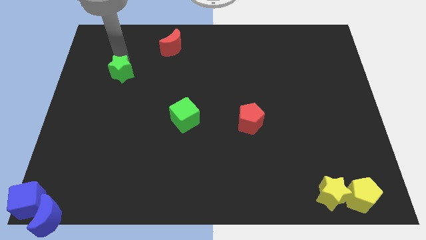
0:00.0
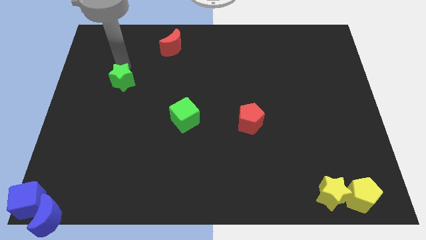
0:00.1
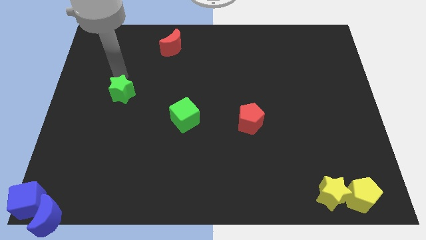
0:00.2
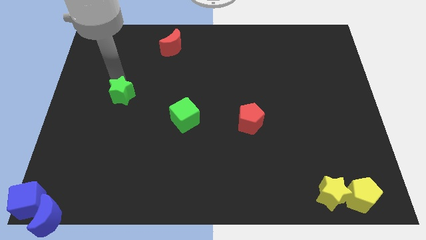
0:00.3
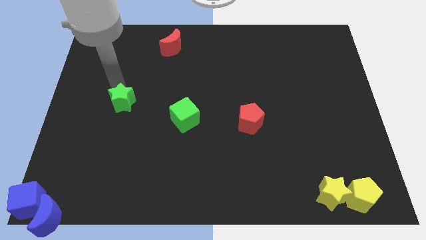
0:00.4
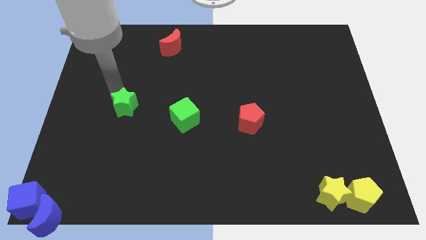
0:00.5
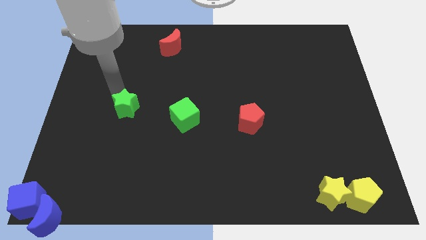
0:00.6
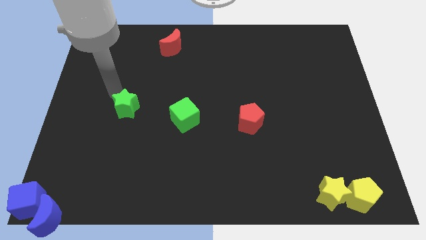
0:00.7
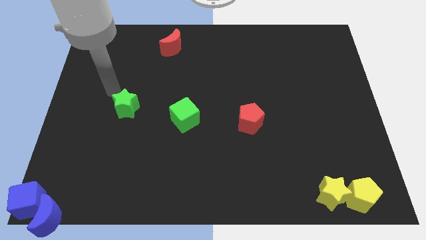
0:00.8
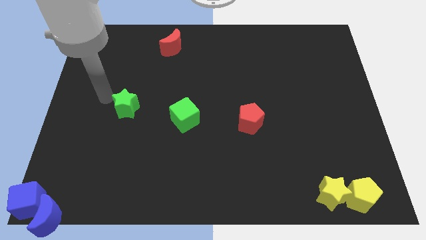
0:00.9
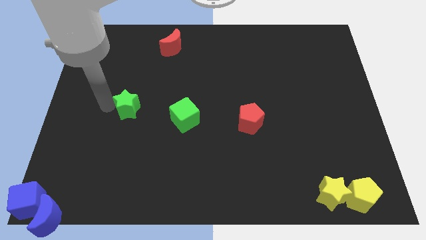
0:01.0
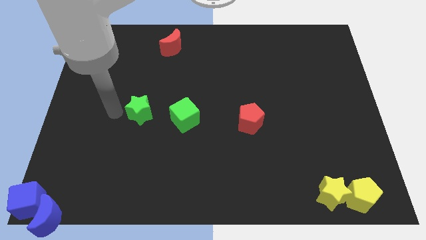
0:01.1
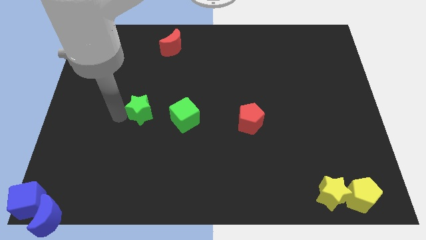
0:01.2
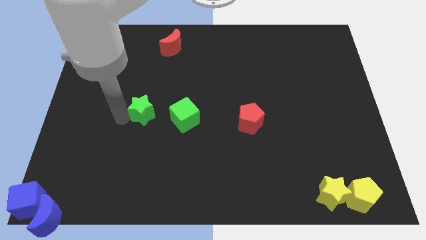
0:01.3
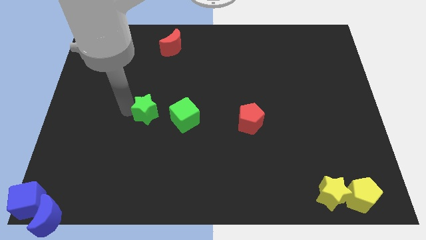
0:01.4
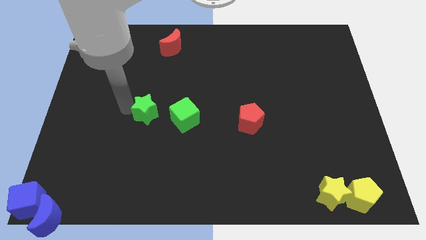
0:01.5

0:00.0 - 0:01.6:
drag the green star slightly downwards

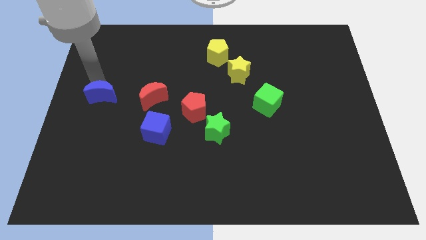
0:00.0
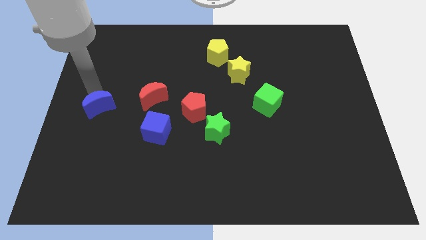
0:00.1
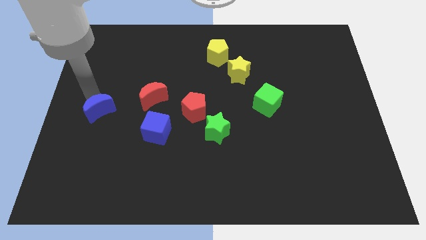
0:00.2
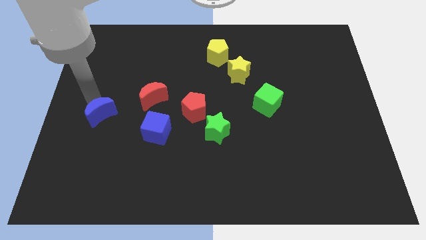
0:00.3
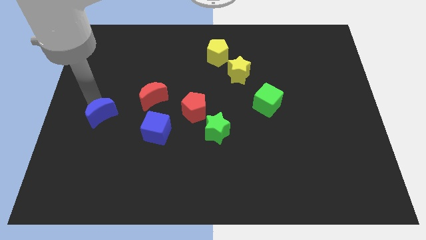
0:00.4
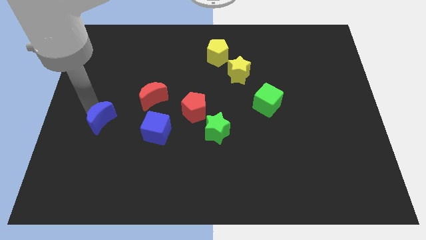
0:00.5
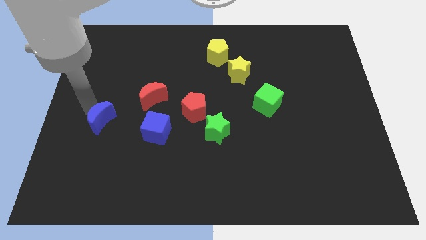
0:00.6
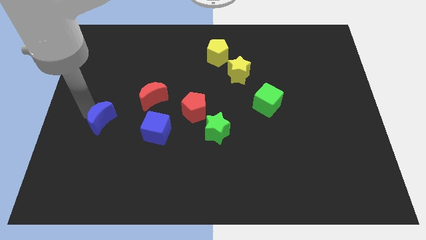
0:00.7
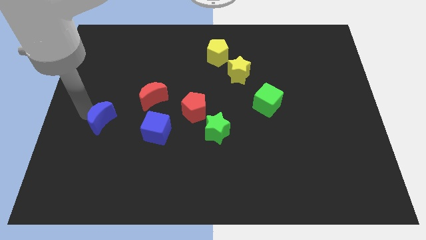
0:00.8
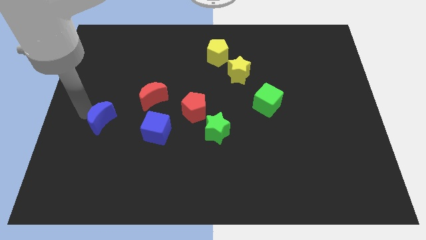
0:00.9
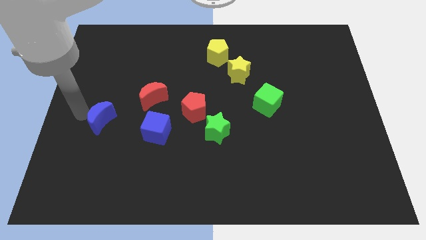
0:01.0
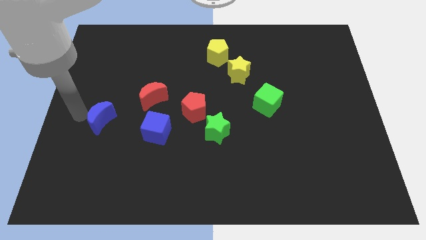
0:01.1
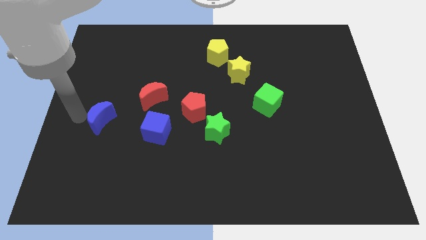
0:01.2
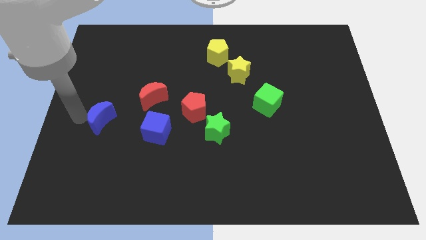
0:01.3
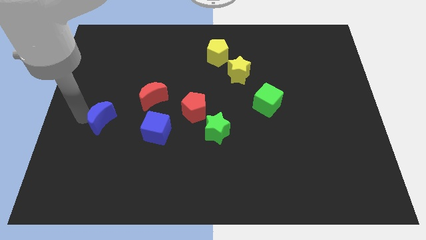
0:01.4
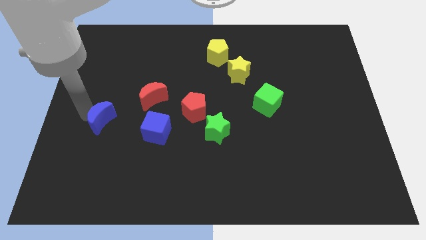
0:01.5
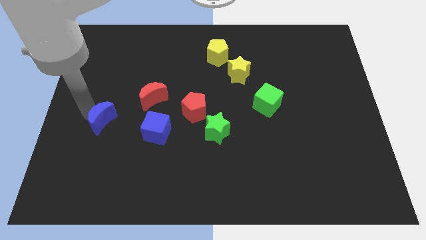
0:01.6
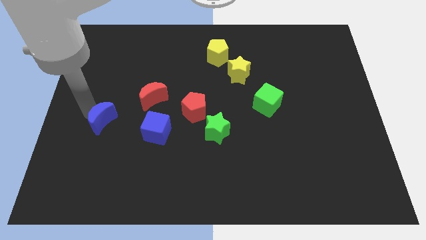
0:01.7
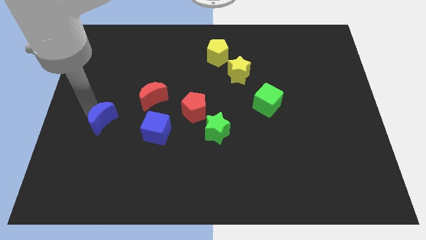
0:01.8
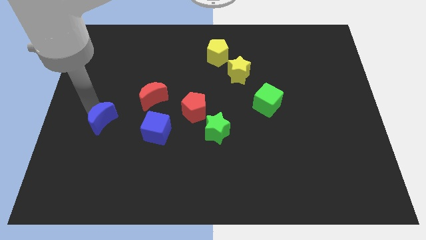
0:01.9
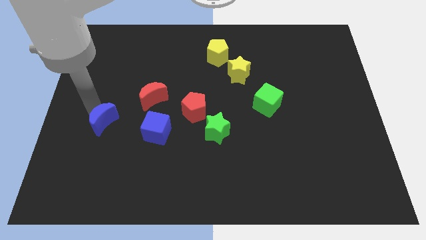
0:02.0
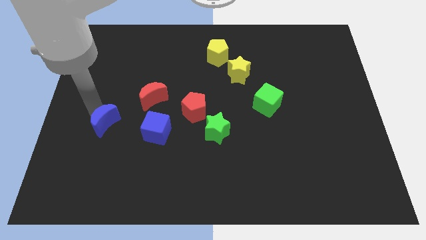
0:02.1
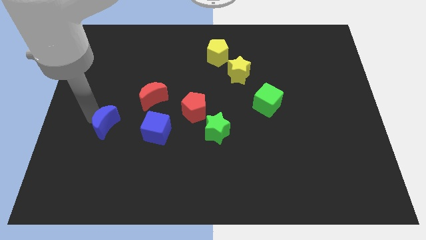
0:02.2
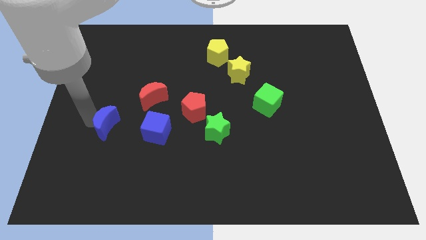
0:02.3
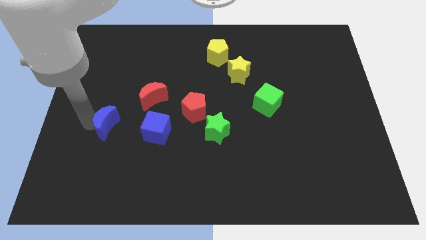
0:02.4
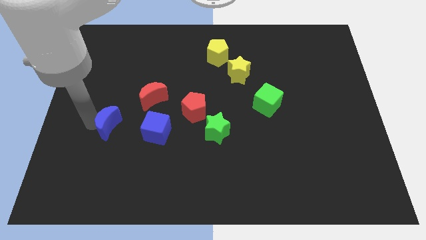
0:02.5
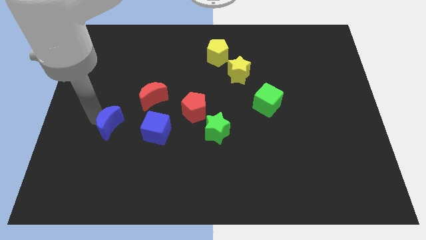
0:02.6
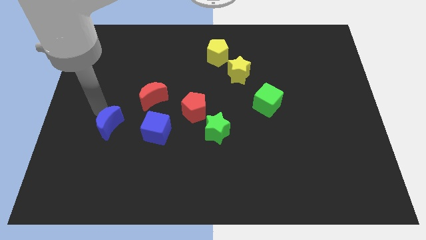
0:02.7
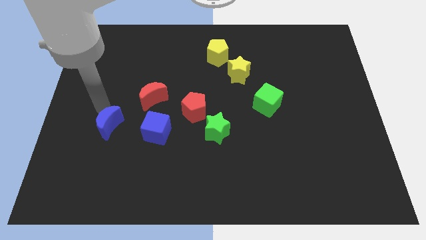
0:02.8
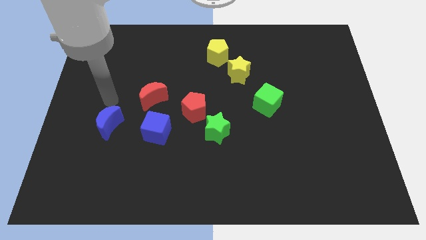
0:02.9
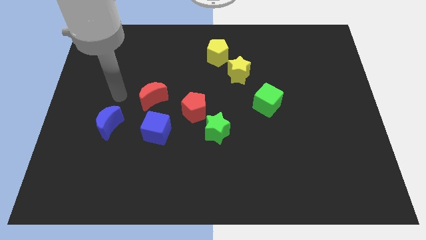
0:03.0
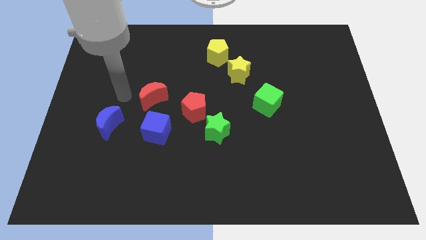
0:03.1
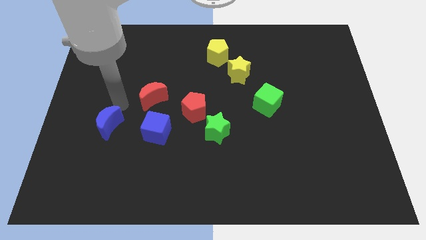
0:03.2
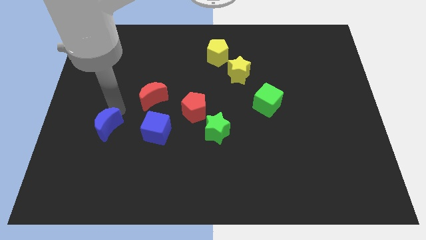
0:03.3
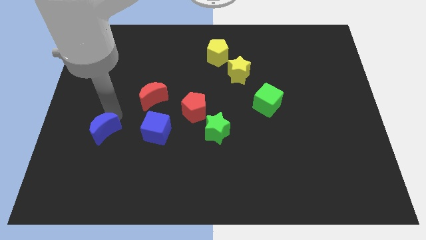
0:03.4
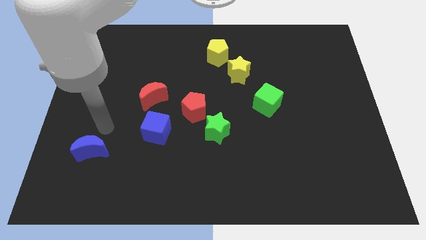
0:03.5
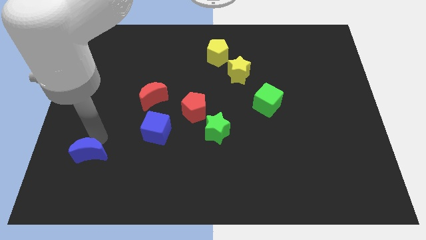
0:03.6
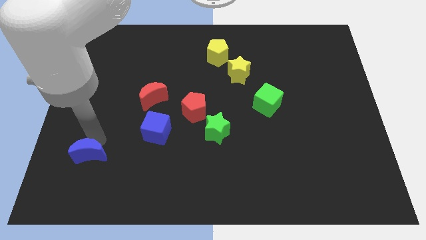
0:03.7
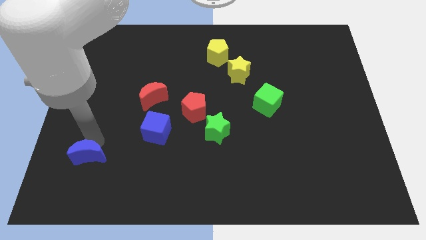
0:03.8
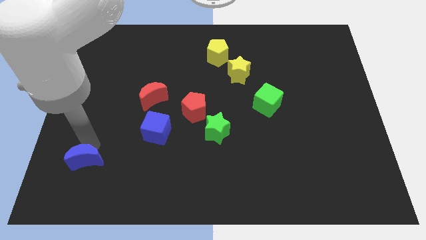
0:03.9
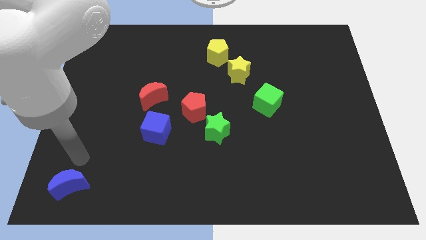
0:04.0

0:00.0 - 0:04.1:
push blue moon towards bottom left

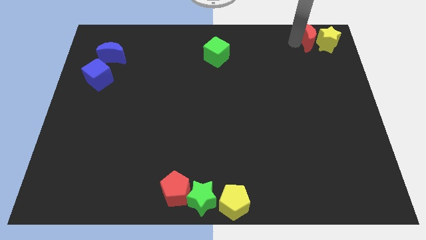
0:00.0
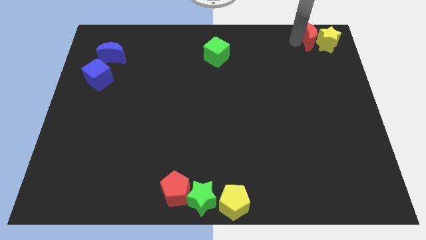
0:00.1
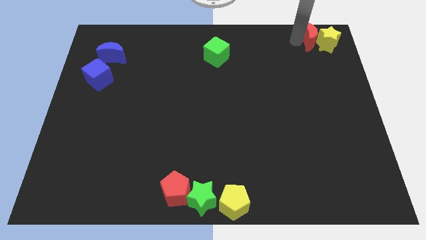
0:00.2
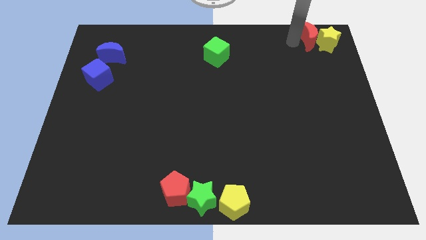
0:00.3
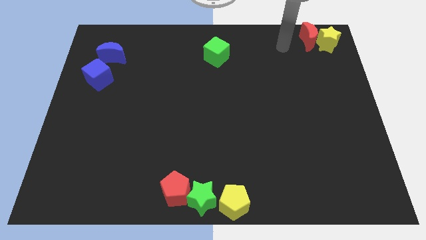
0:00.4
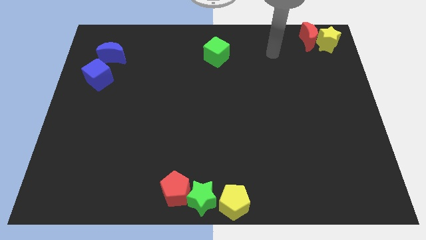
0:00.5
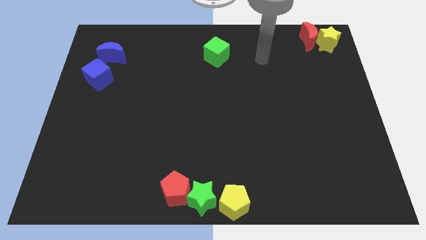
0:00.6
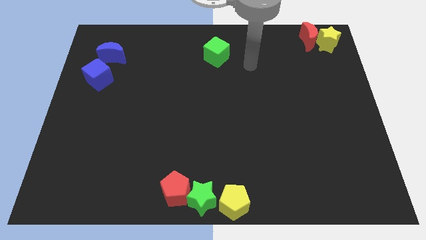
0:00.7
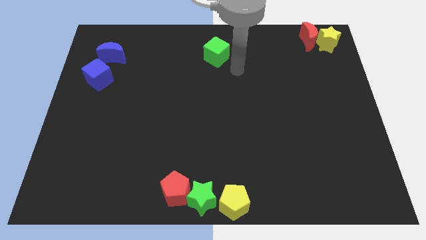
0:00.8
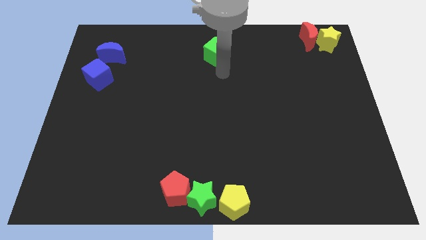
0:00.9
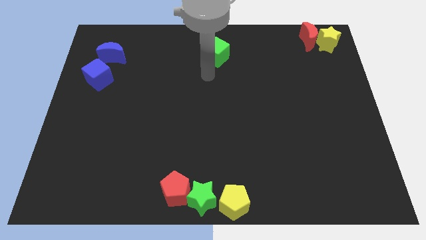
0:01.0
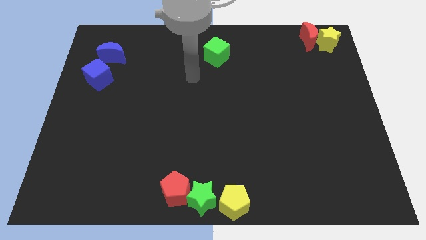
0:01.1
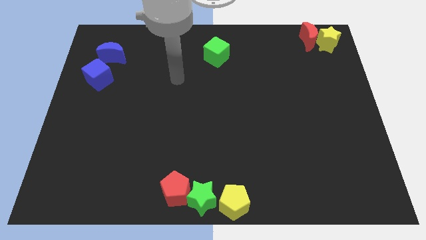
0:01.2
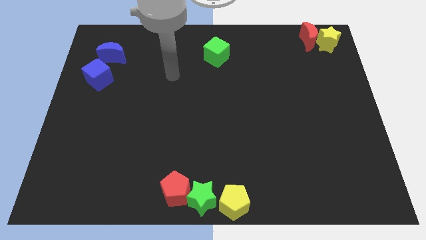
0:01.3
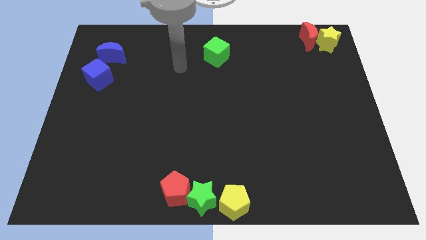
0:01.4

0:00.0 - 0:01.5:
move your arm away from red moon

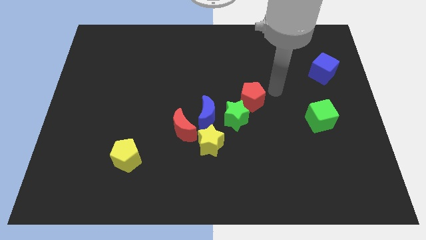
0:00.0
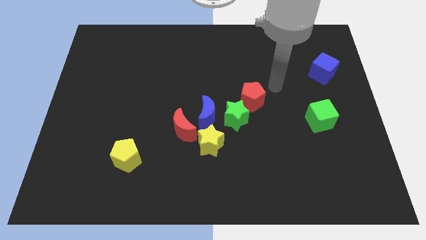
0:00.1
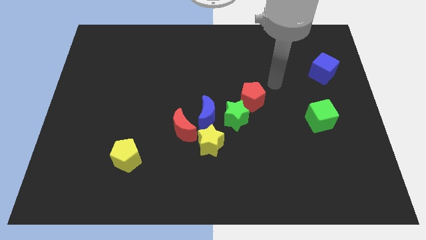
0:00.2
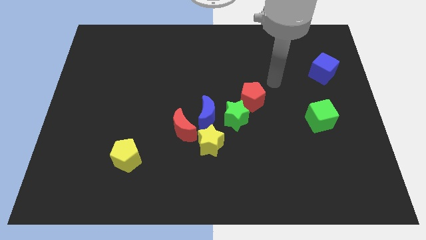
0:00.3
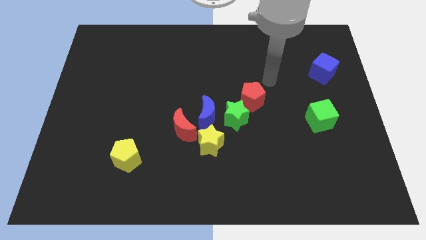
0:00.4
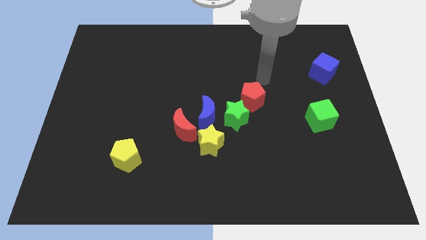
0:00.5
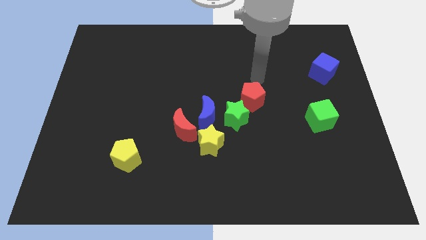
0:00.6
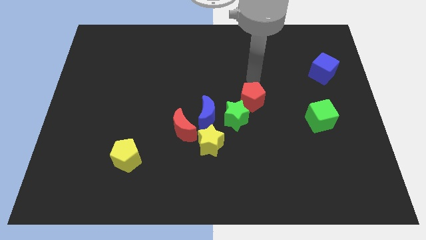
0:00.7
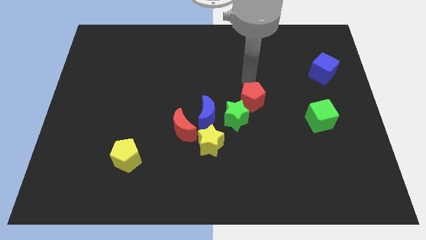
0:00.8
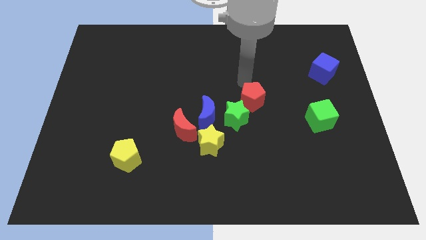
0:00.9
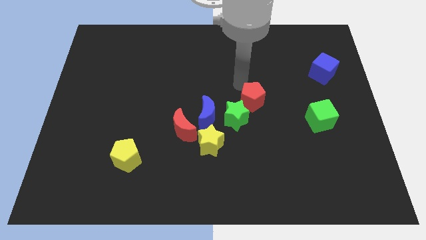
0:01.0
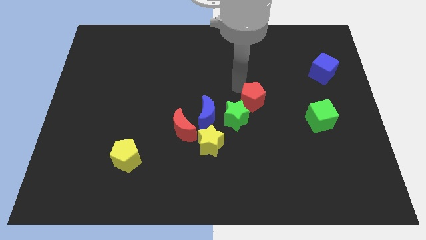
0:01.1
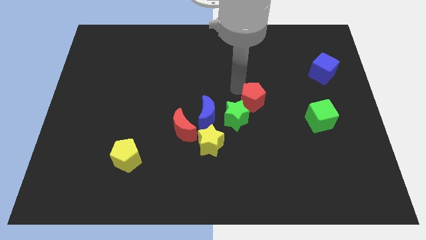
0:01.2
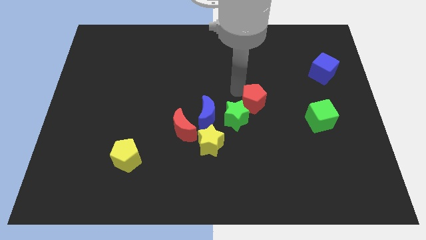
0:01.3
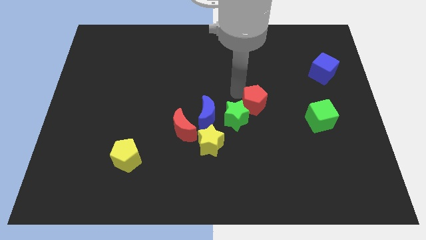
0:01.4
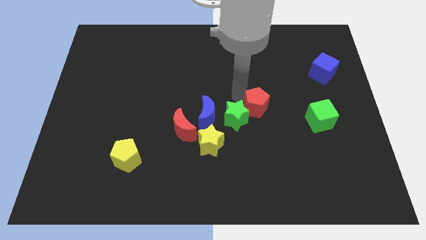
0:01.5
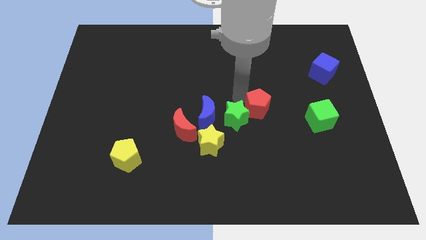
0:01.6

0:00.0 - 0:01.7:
push the red pentagon slightly to the bottom of the board

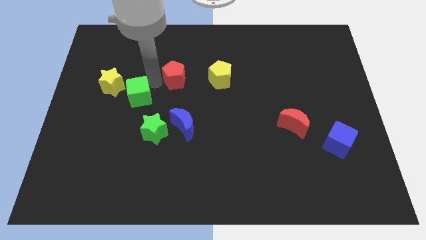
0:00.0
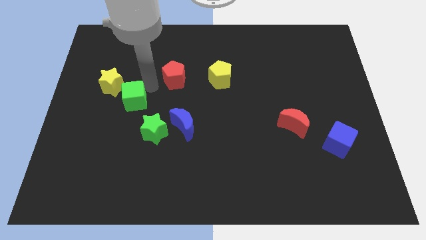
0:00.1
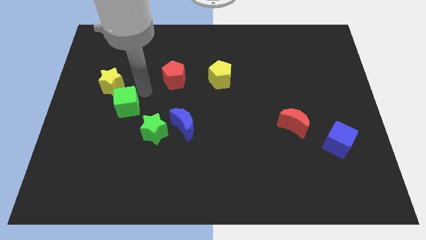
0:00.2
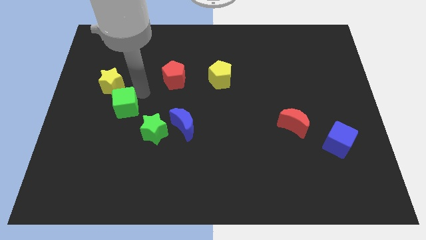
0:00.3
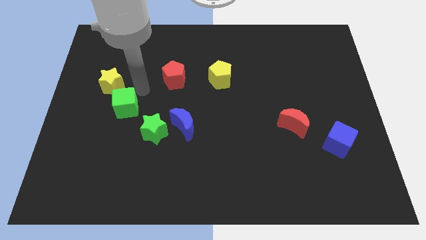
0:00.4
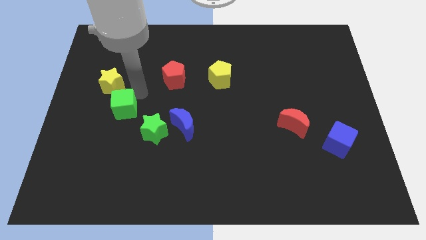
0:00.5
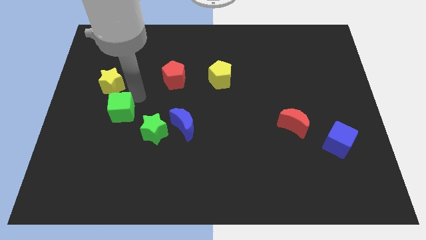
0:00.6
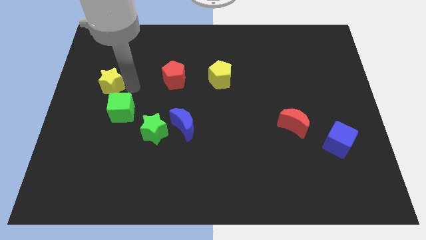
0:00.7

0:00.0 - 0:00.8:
push the green cube to the bottom of the yellow star
